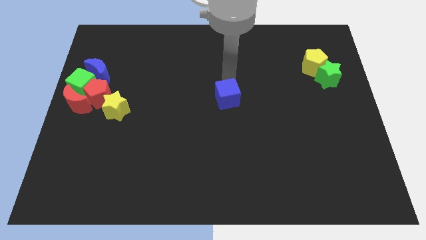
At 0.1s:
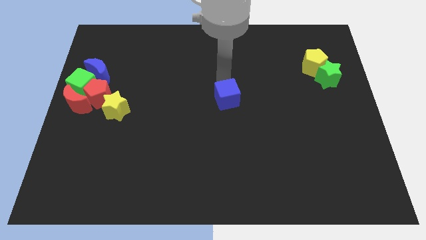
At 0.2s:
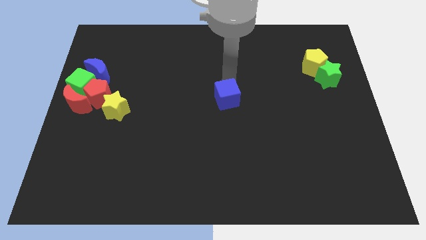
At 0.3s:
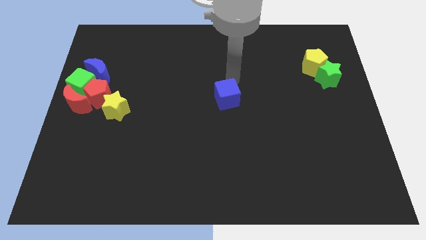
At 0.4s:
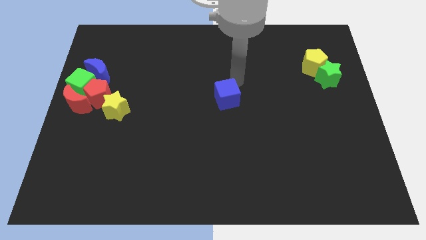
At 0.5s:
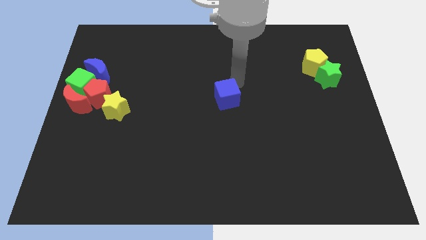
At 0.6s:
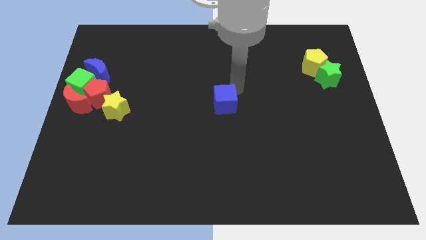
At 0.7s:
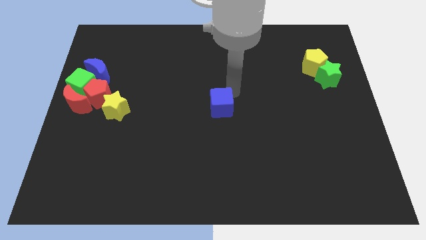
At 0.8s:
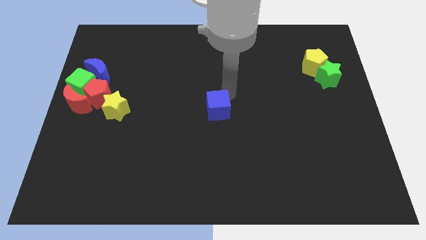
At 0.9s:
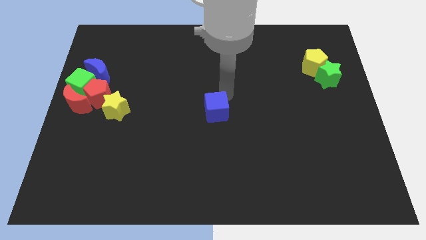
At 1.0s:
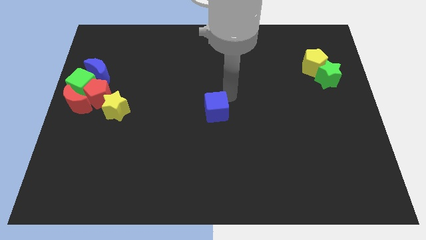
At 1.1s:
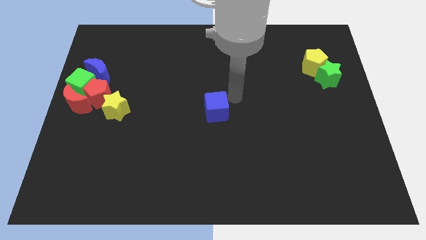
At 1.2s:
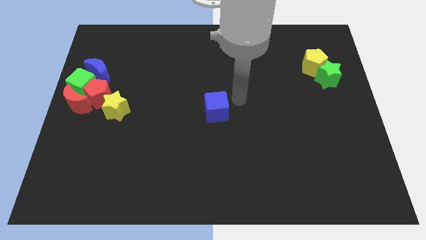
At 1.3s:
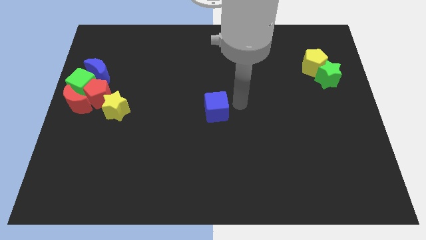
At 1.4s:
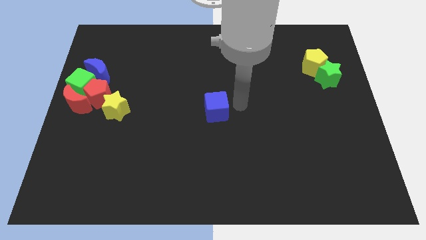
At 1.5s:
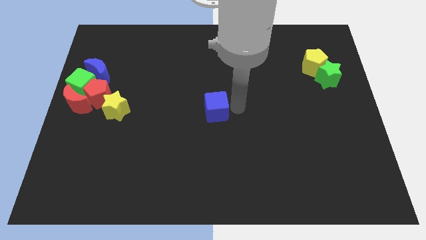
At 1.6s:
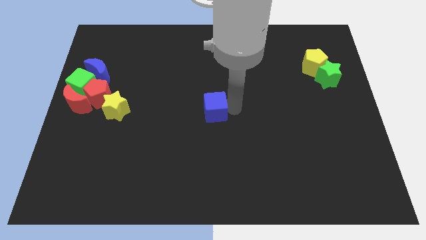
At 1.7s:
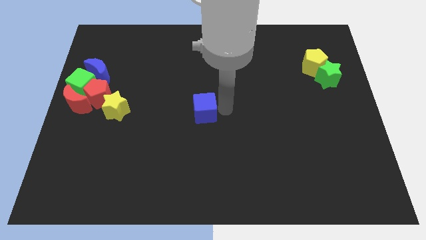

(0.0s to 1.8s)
push the blue cube to the center of the board

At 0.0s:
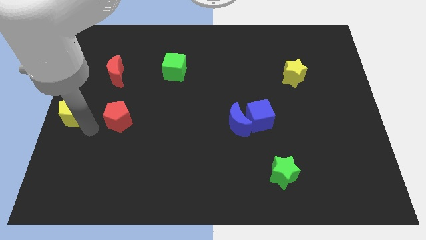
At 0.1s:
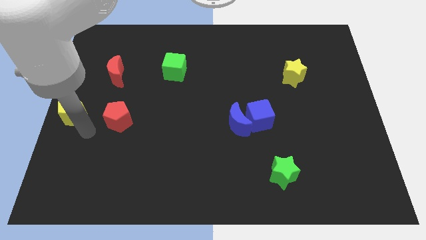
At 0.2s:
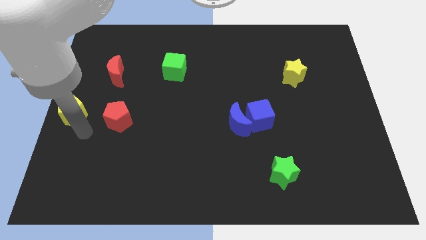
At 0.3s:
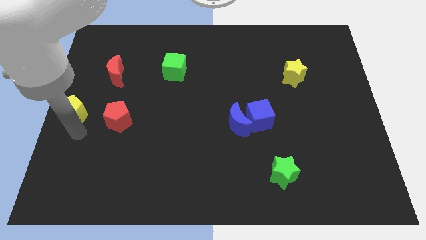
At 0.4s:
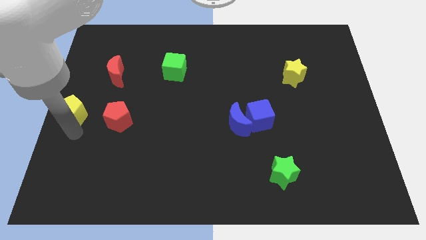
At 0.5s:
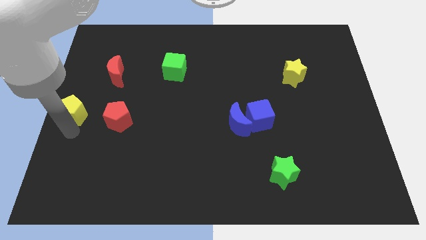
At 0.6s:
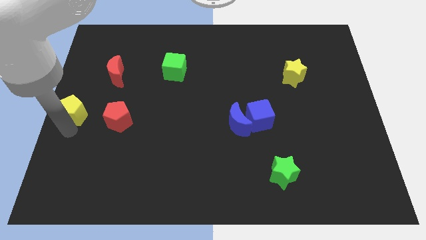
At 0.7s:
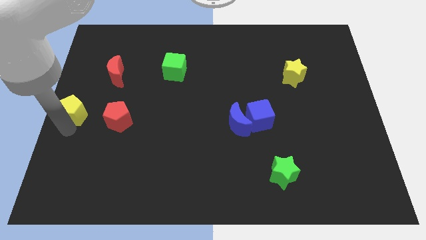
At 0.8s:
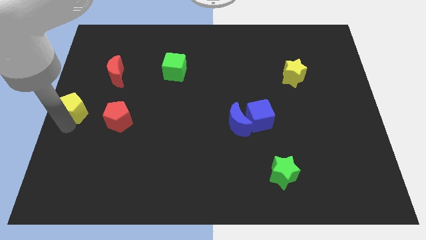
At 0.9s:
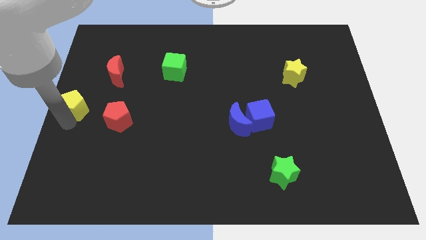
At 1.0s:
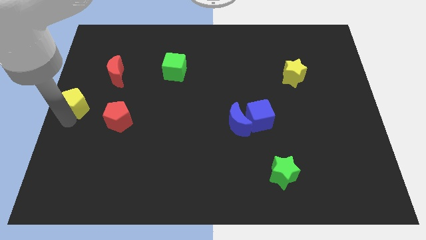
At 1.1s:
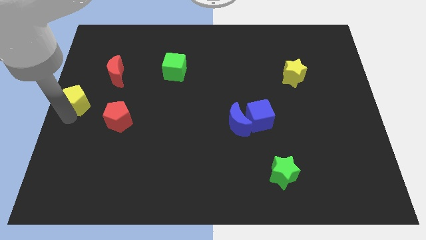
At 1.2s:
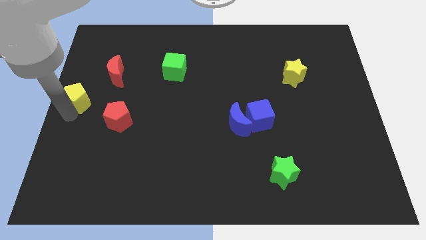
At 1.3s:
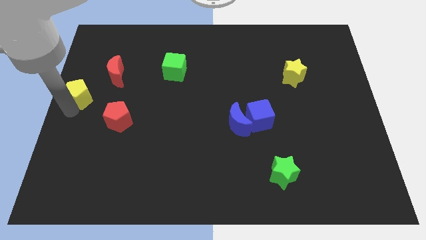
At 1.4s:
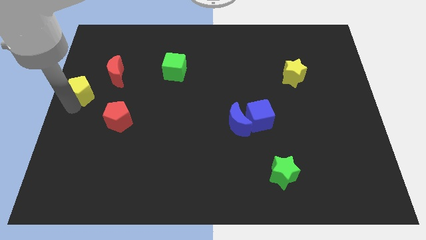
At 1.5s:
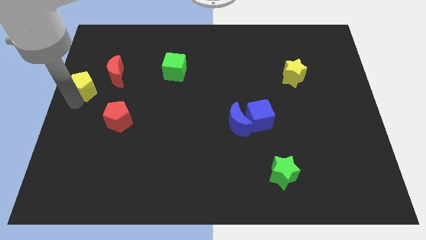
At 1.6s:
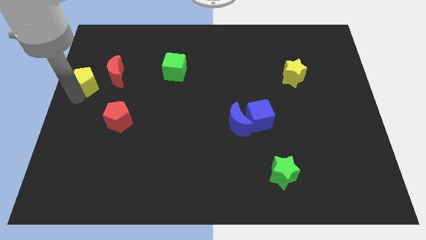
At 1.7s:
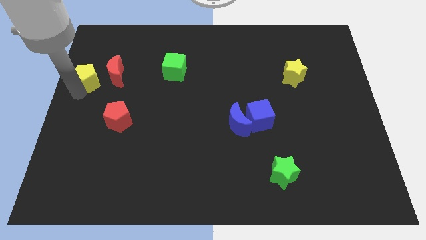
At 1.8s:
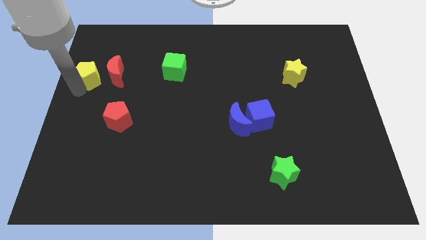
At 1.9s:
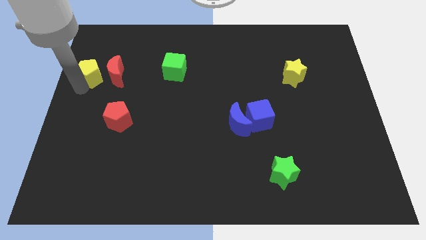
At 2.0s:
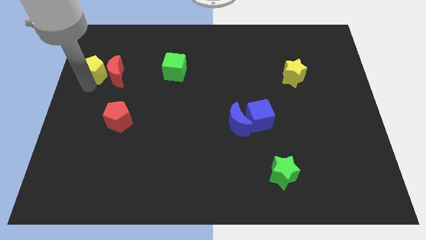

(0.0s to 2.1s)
place yellow pentagon to the left of red moon

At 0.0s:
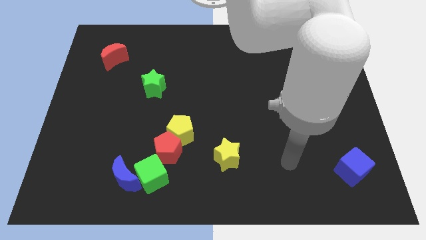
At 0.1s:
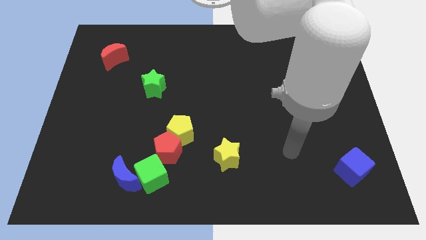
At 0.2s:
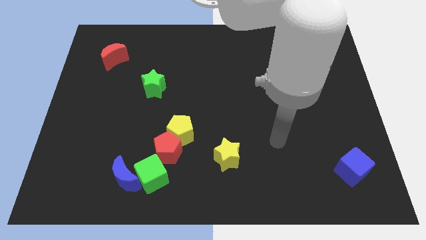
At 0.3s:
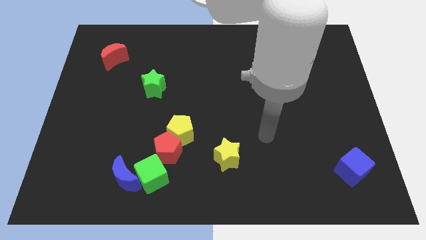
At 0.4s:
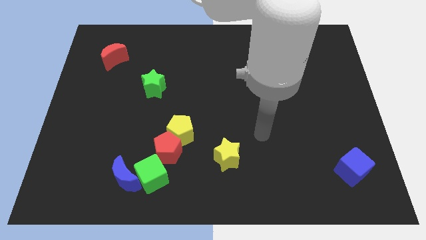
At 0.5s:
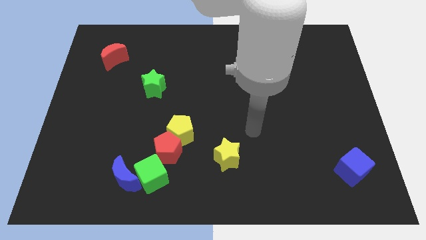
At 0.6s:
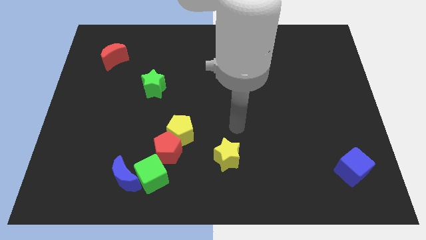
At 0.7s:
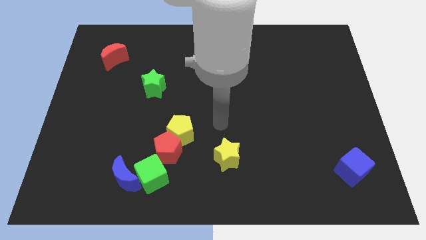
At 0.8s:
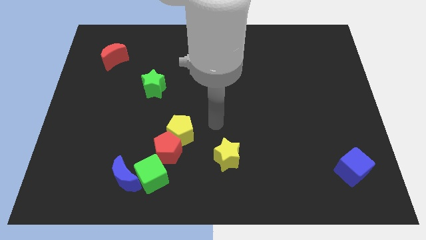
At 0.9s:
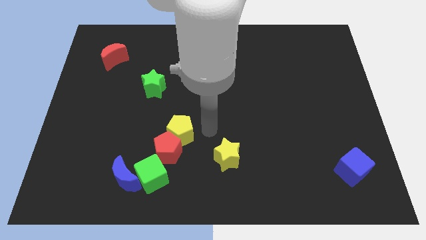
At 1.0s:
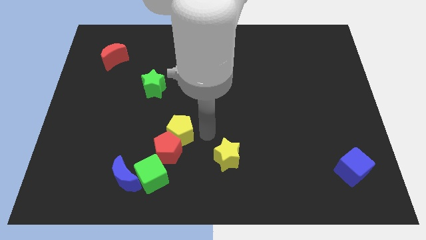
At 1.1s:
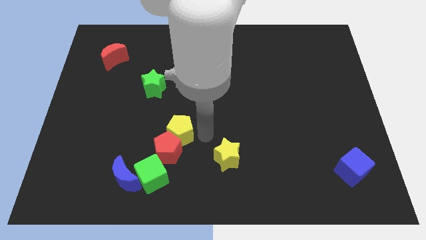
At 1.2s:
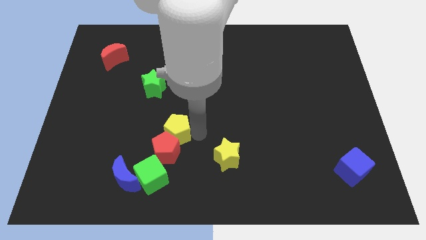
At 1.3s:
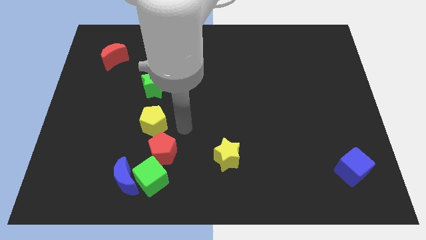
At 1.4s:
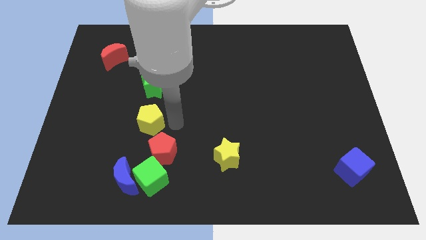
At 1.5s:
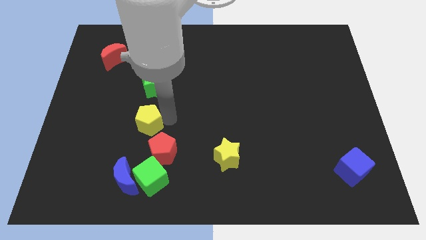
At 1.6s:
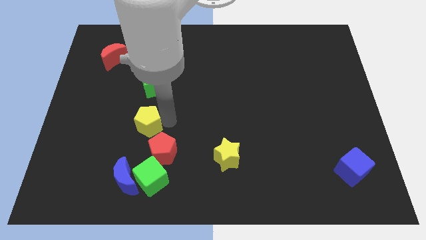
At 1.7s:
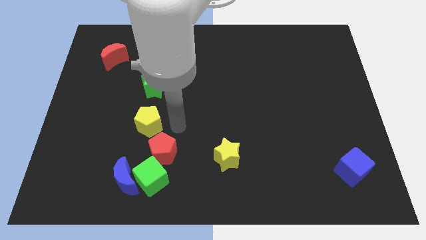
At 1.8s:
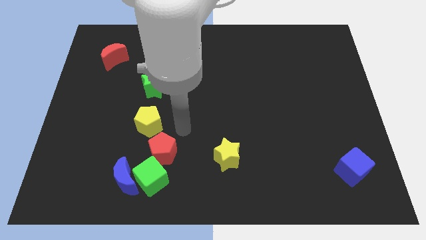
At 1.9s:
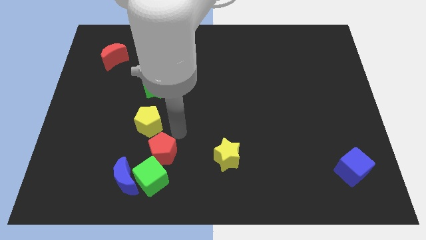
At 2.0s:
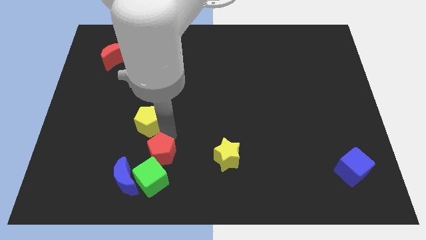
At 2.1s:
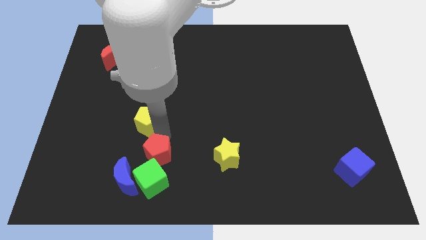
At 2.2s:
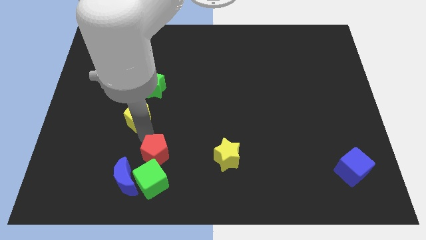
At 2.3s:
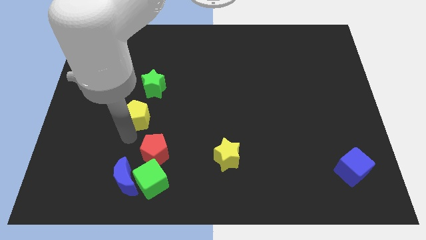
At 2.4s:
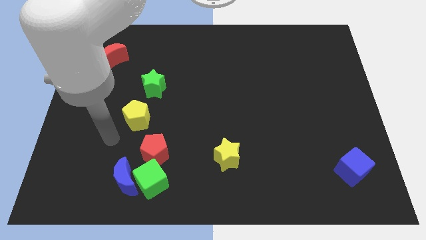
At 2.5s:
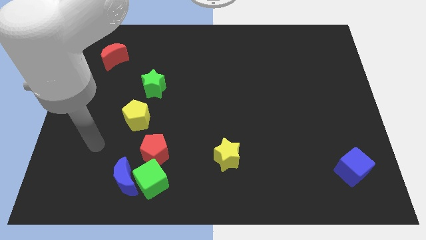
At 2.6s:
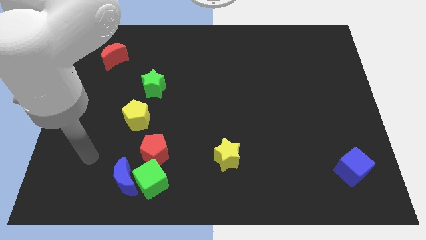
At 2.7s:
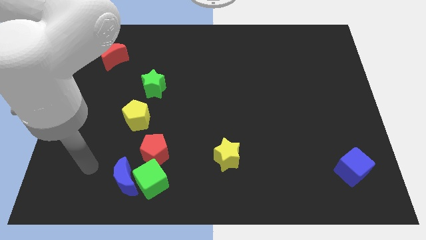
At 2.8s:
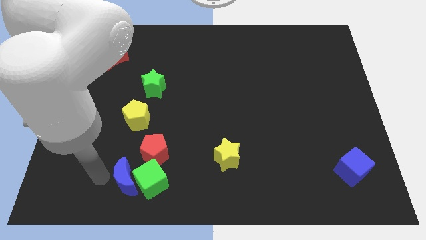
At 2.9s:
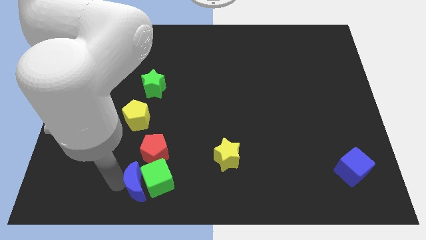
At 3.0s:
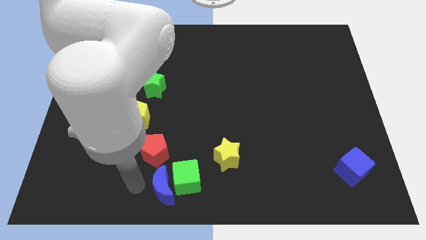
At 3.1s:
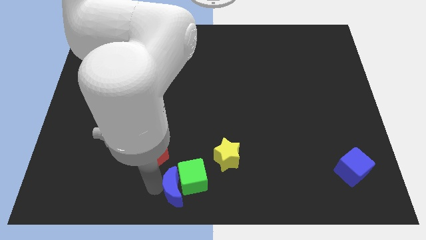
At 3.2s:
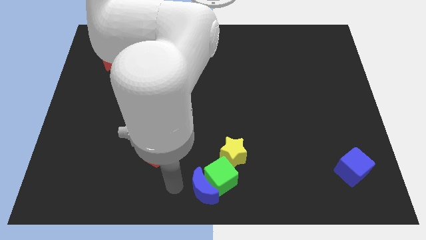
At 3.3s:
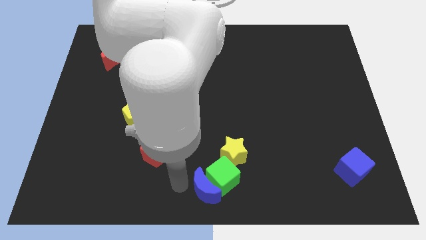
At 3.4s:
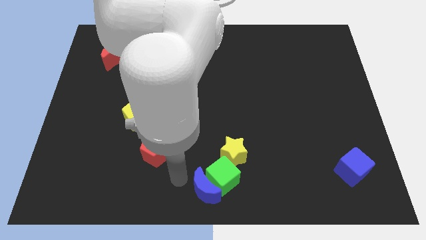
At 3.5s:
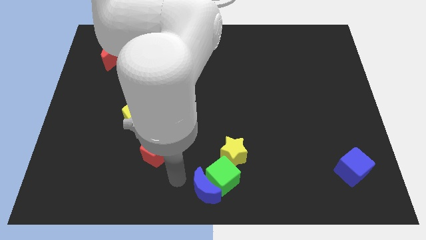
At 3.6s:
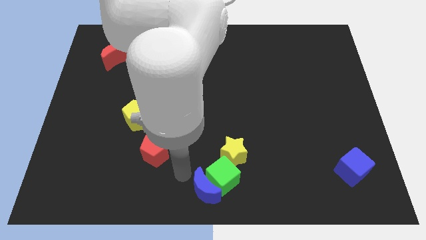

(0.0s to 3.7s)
move your arm close to the blue moon

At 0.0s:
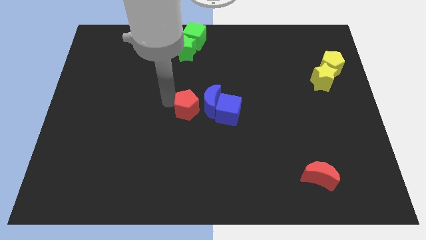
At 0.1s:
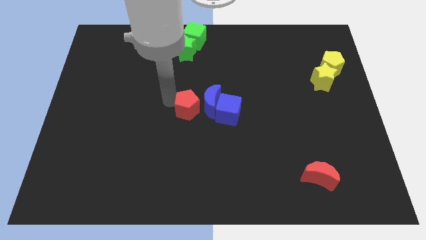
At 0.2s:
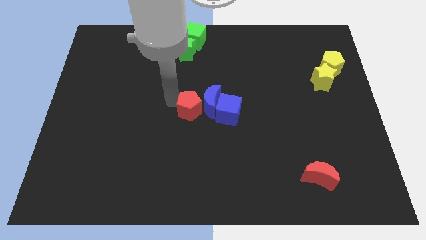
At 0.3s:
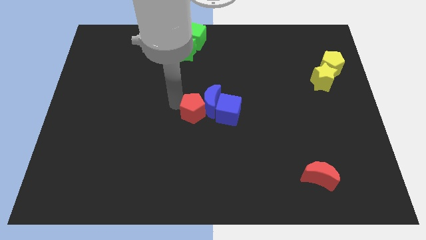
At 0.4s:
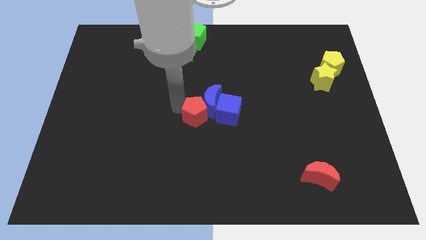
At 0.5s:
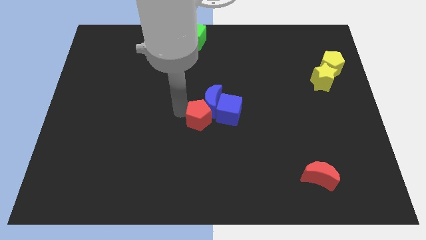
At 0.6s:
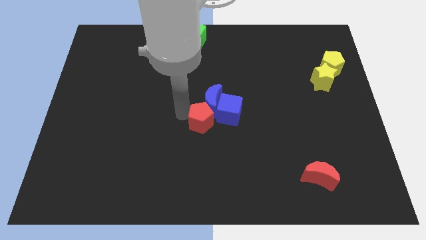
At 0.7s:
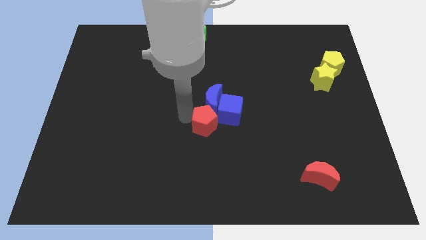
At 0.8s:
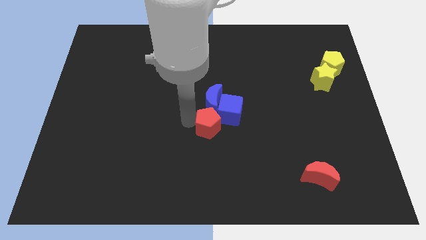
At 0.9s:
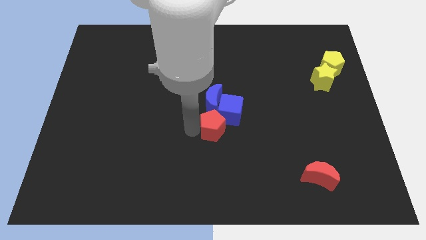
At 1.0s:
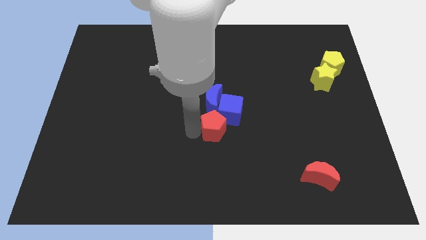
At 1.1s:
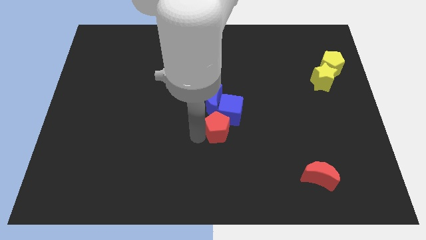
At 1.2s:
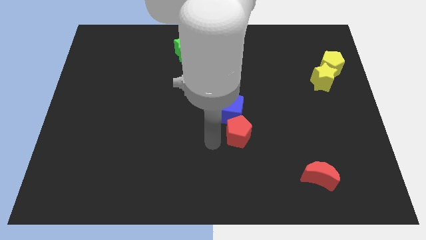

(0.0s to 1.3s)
place the red pentagon below the blue cube

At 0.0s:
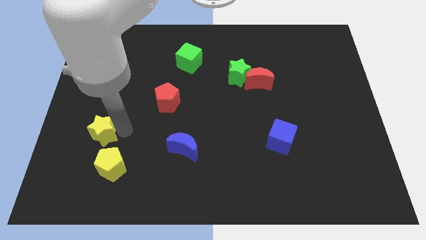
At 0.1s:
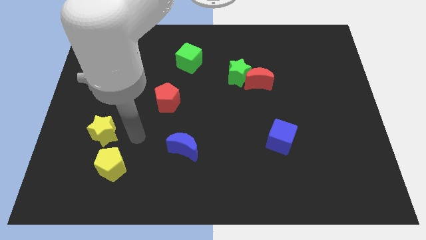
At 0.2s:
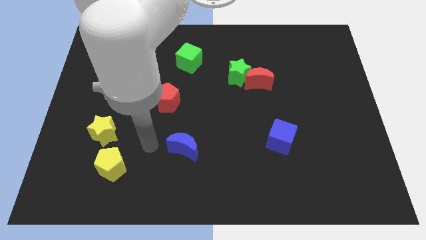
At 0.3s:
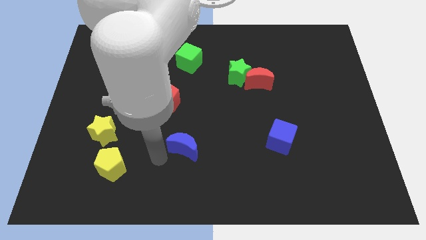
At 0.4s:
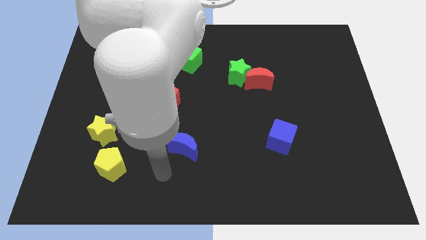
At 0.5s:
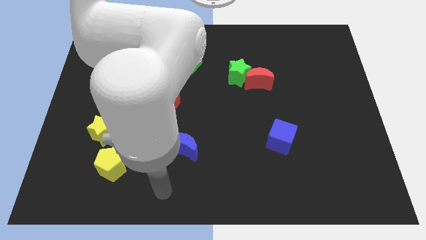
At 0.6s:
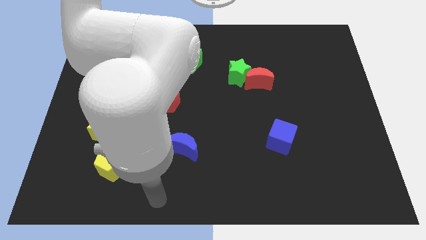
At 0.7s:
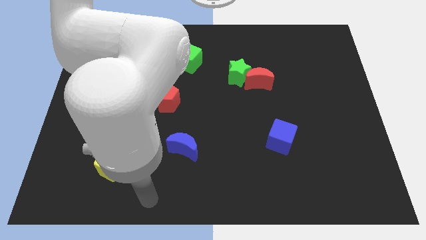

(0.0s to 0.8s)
move your arm away from the yellow star
